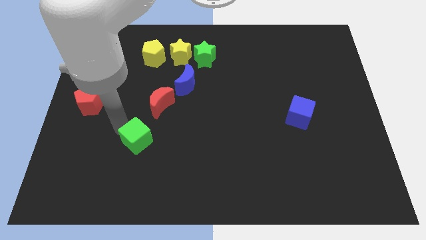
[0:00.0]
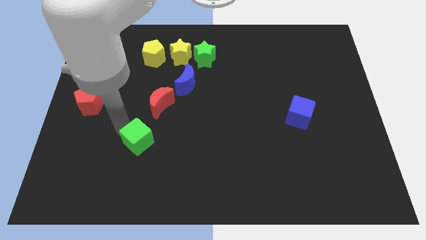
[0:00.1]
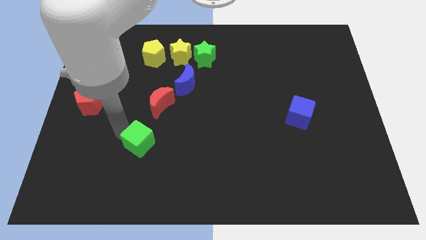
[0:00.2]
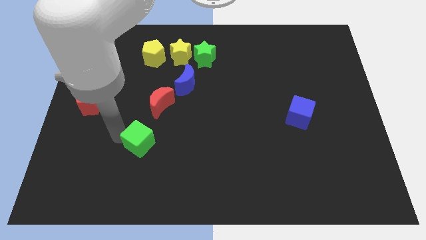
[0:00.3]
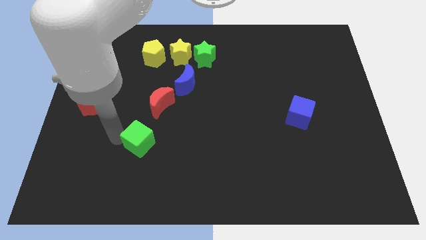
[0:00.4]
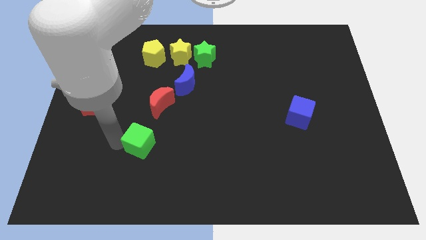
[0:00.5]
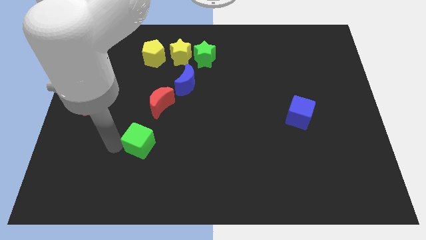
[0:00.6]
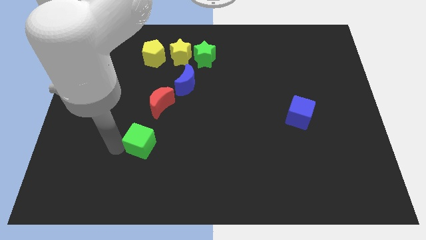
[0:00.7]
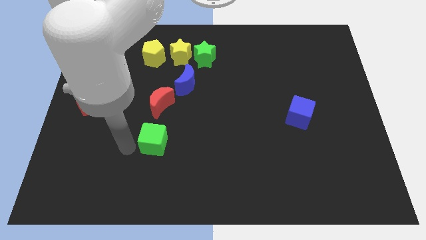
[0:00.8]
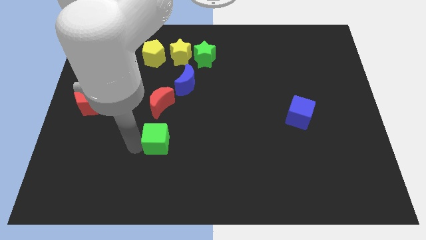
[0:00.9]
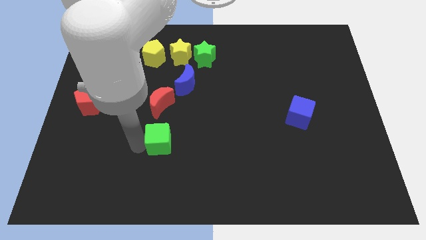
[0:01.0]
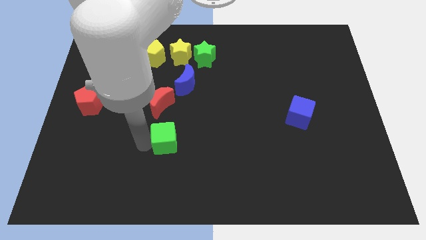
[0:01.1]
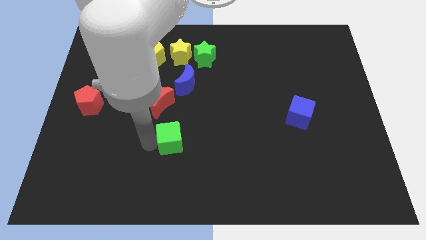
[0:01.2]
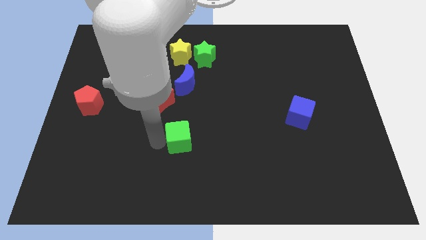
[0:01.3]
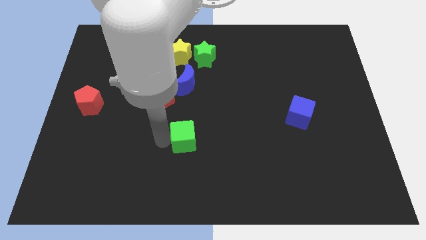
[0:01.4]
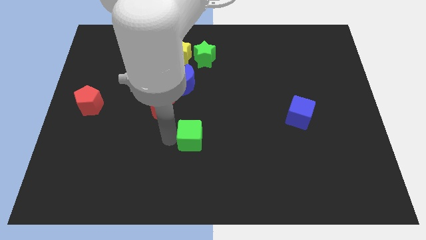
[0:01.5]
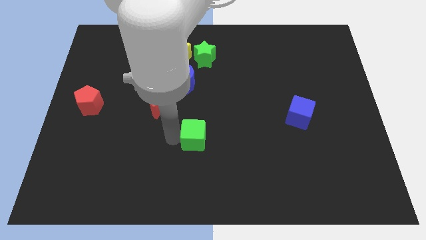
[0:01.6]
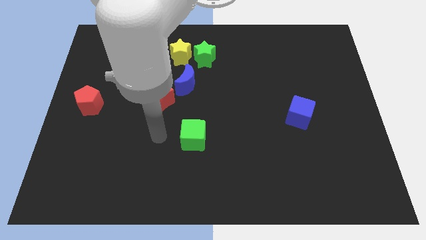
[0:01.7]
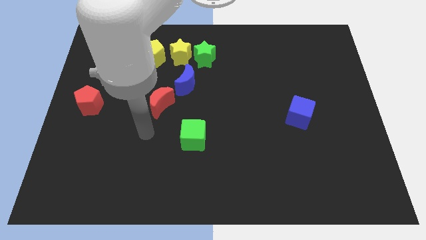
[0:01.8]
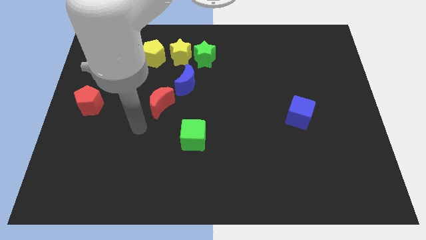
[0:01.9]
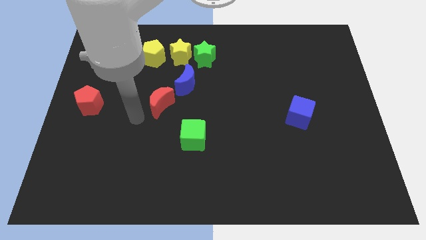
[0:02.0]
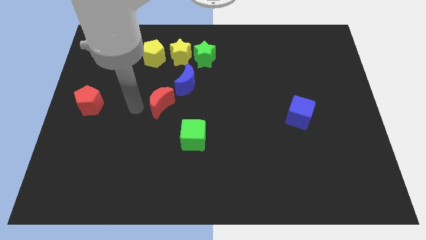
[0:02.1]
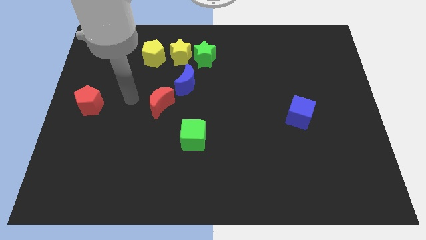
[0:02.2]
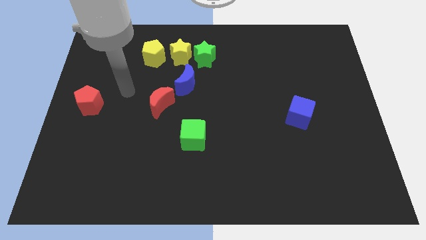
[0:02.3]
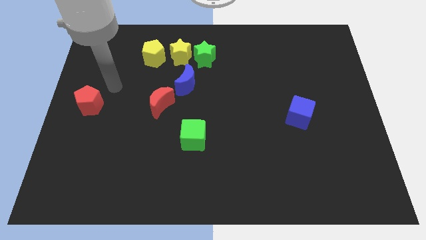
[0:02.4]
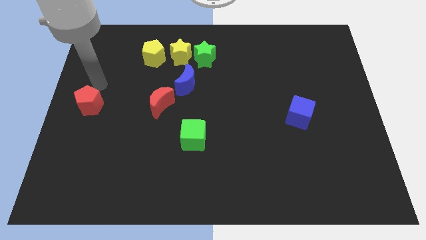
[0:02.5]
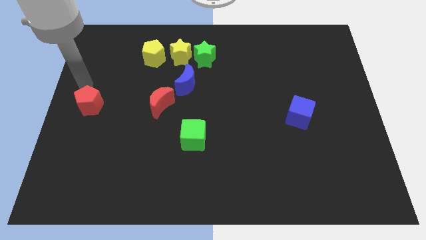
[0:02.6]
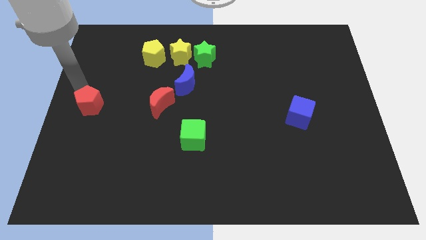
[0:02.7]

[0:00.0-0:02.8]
push the green cube towards the blue cube

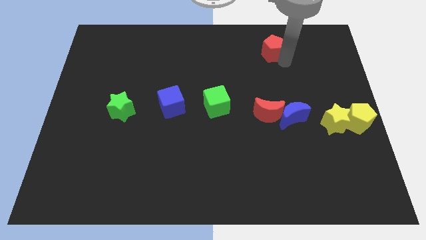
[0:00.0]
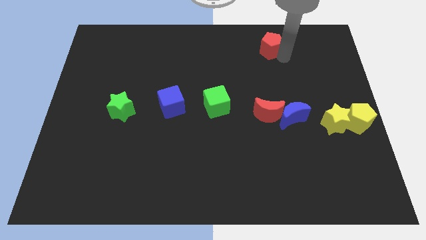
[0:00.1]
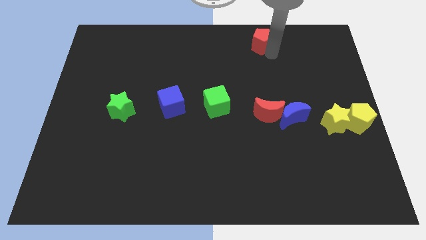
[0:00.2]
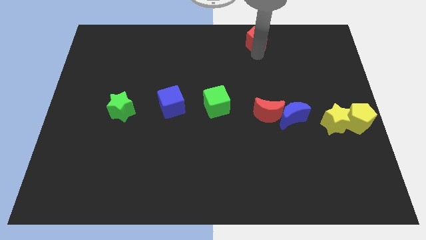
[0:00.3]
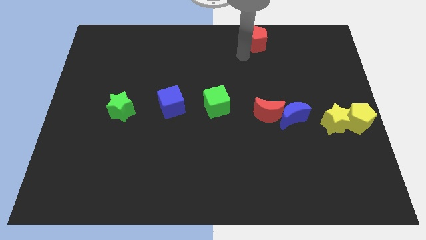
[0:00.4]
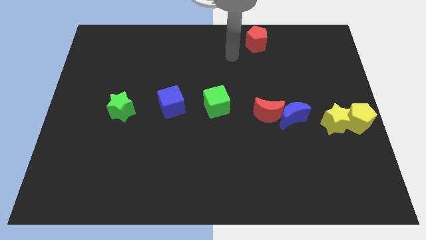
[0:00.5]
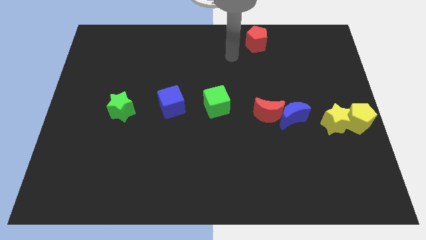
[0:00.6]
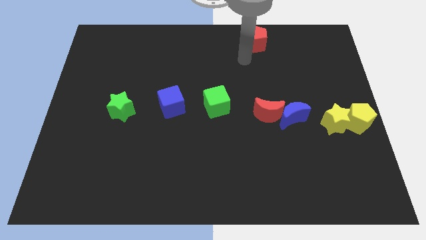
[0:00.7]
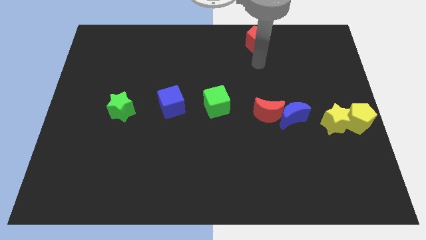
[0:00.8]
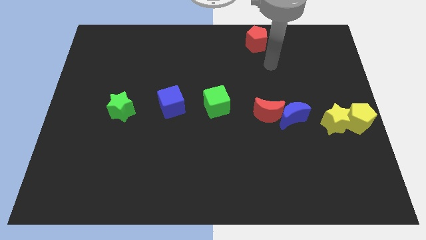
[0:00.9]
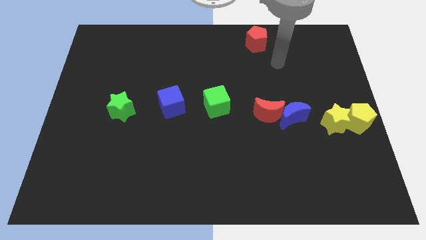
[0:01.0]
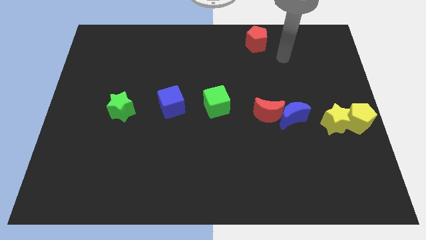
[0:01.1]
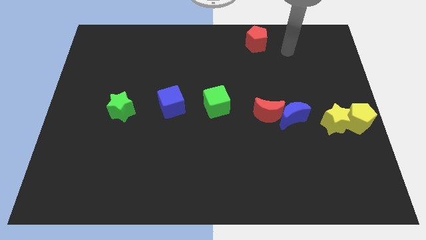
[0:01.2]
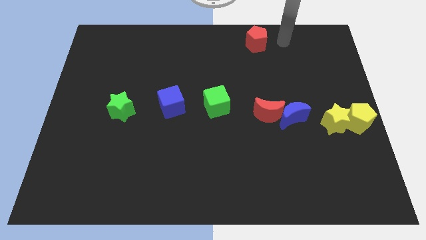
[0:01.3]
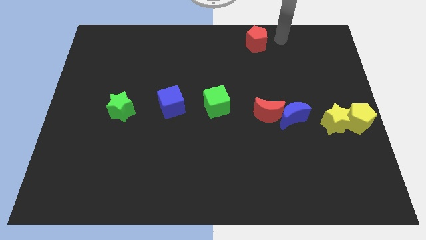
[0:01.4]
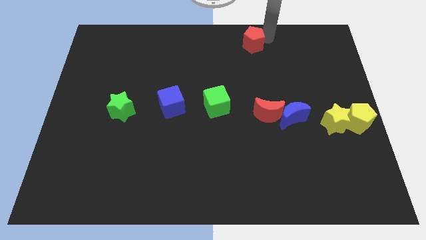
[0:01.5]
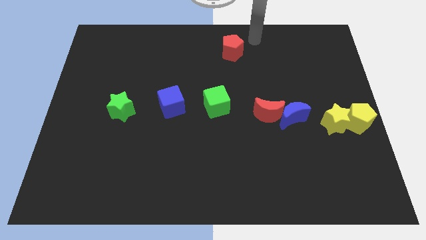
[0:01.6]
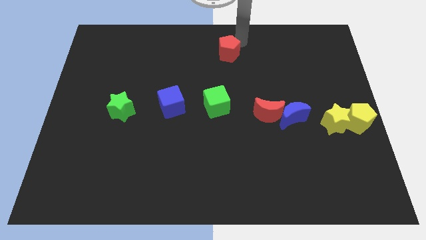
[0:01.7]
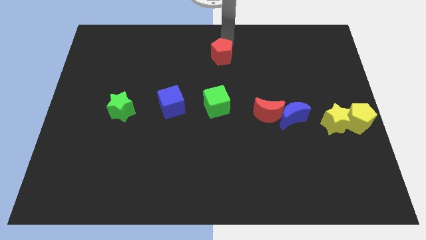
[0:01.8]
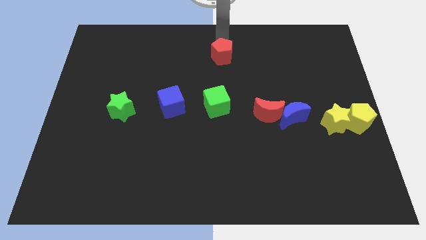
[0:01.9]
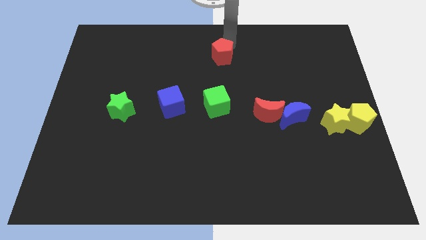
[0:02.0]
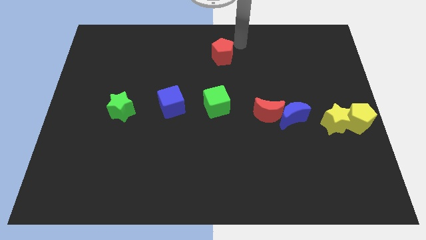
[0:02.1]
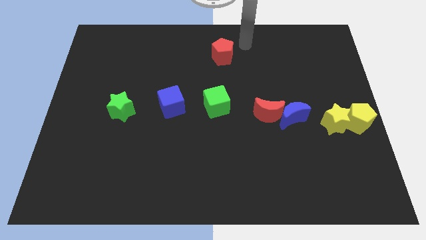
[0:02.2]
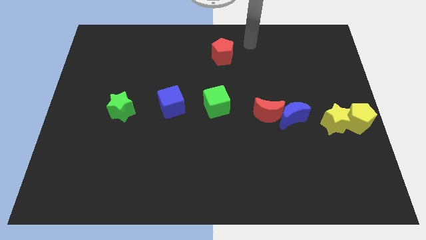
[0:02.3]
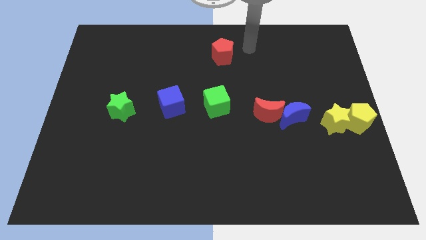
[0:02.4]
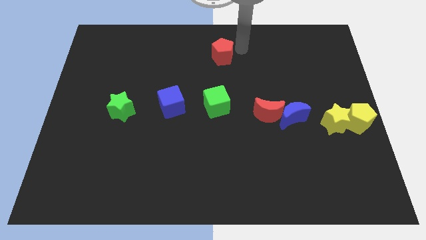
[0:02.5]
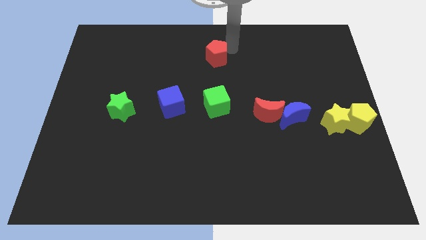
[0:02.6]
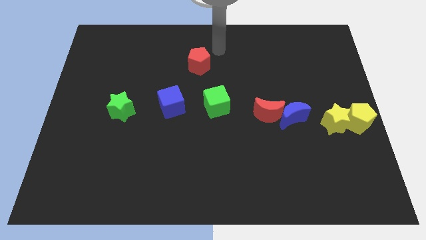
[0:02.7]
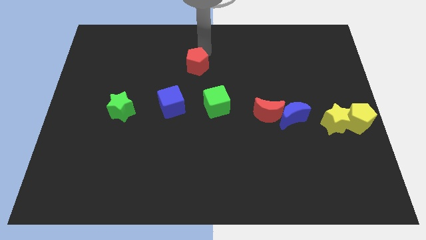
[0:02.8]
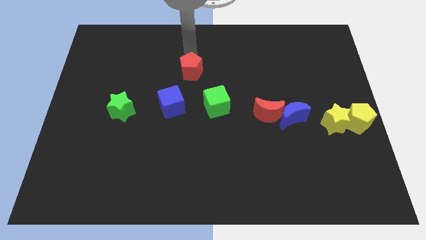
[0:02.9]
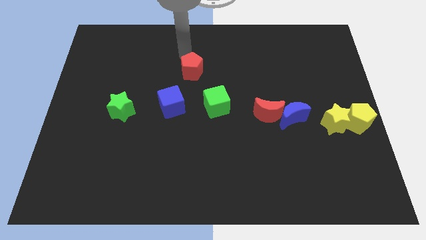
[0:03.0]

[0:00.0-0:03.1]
make a triangle by placing red pentagon above green cube and blue cube

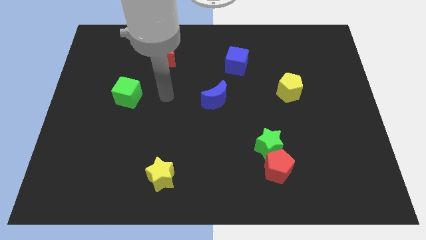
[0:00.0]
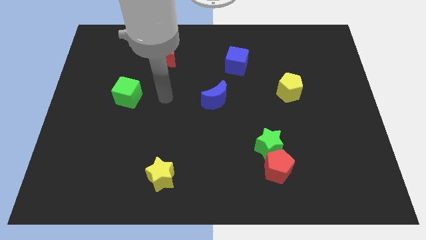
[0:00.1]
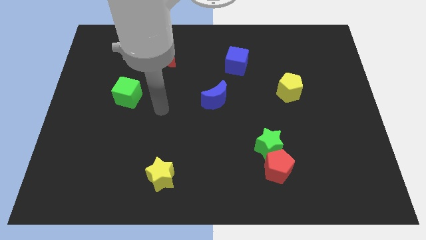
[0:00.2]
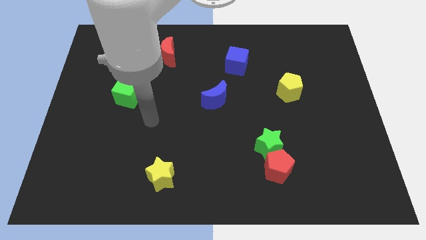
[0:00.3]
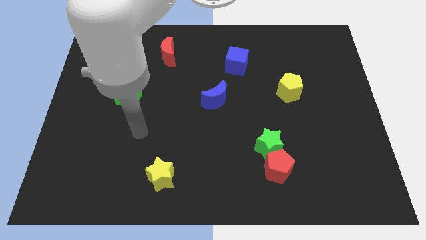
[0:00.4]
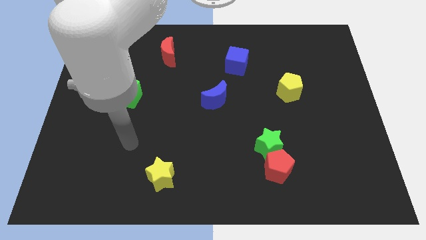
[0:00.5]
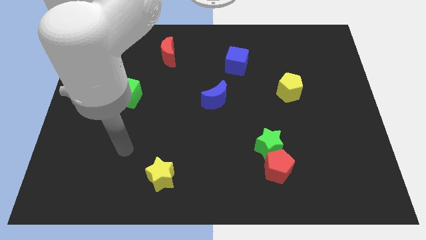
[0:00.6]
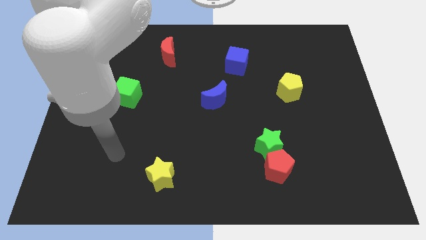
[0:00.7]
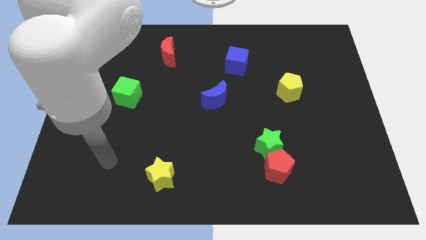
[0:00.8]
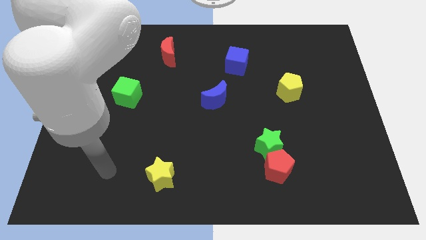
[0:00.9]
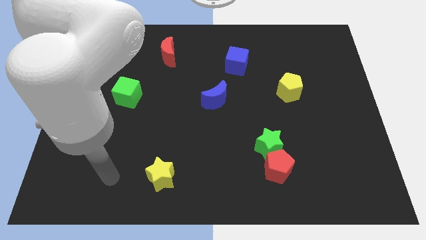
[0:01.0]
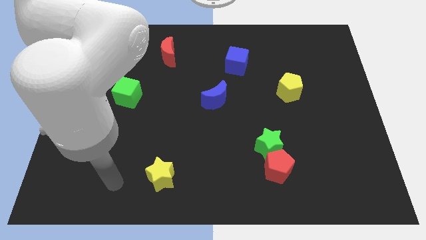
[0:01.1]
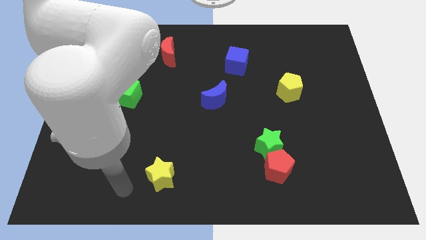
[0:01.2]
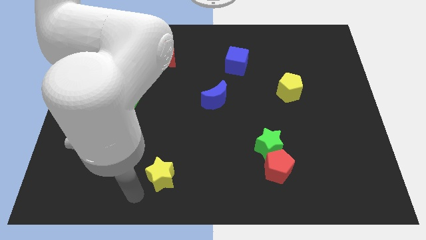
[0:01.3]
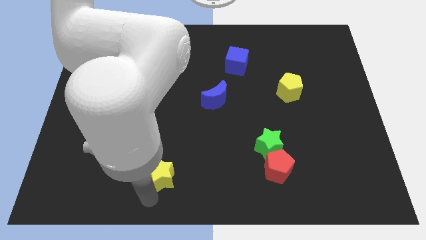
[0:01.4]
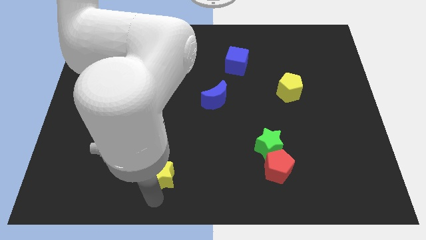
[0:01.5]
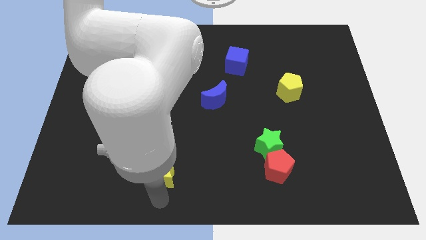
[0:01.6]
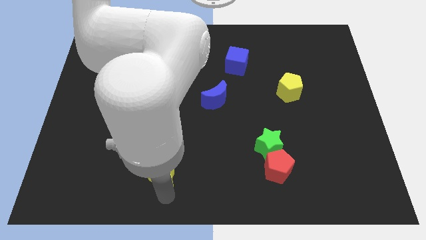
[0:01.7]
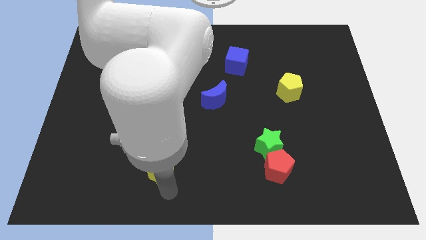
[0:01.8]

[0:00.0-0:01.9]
place the arm down to the yellow star

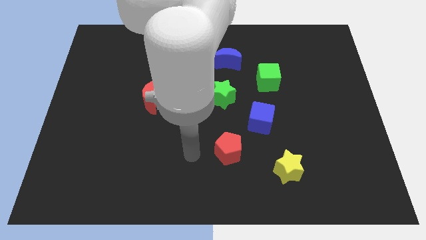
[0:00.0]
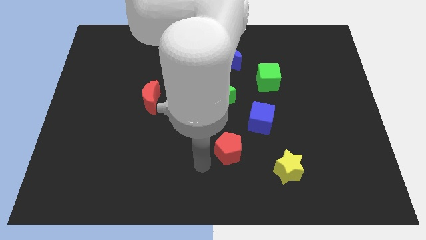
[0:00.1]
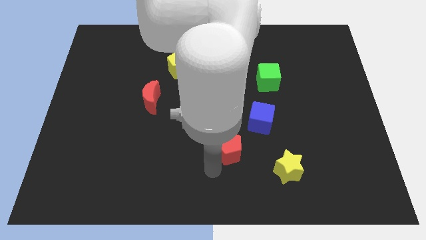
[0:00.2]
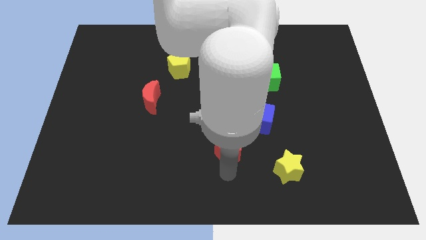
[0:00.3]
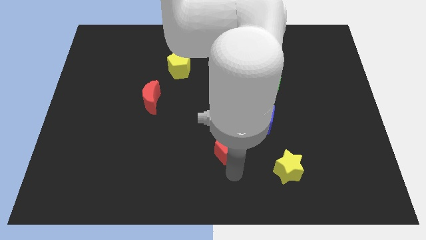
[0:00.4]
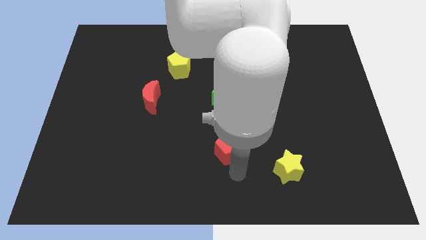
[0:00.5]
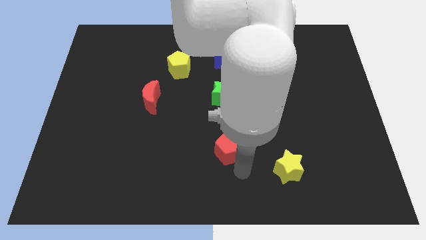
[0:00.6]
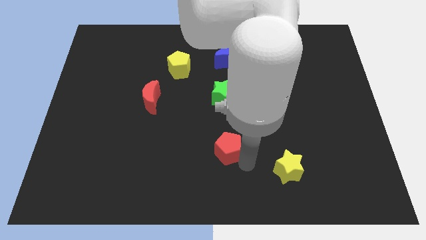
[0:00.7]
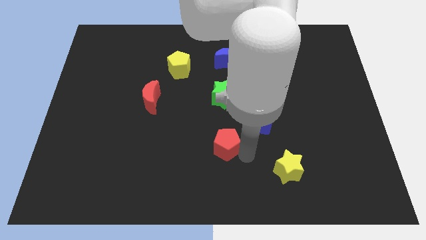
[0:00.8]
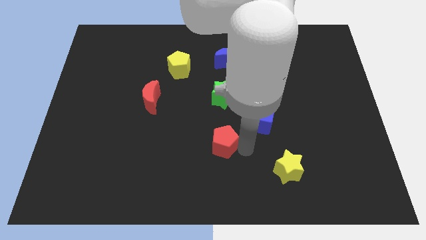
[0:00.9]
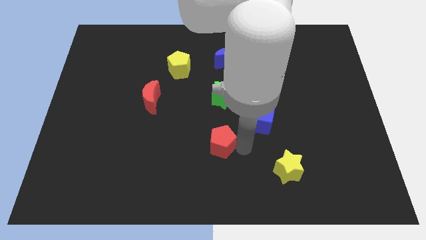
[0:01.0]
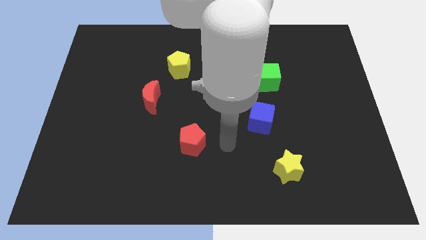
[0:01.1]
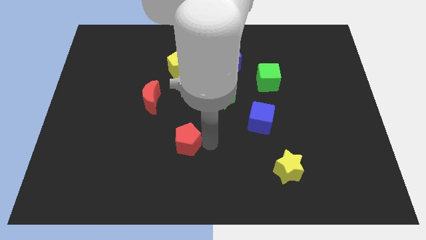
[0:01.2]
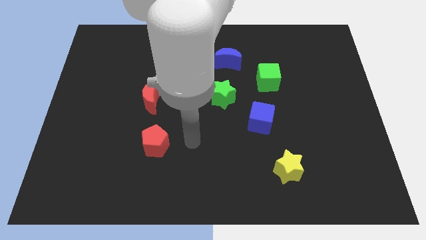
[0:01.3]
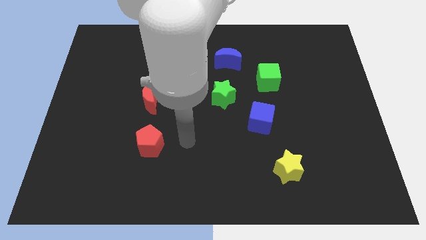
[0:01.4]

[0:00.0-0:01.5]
place the red pentagon at the bottom of the red crescent
